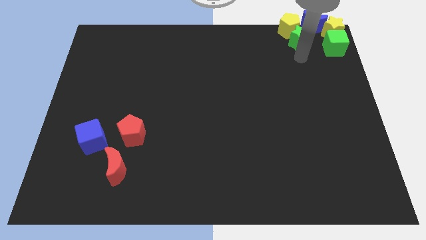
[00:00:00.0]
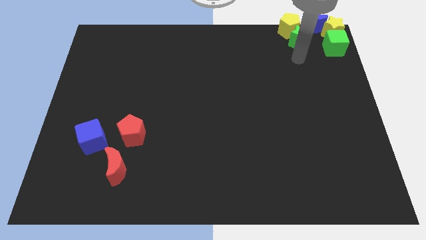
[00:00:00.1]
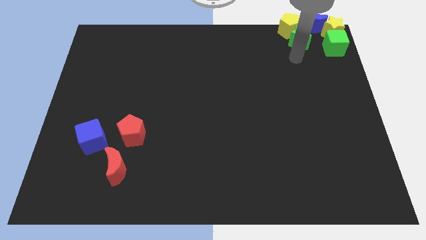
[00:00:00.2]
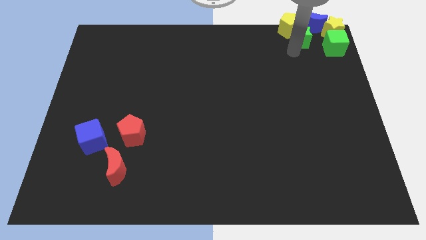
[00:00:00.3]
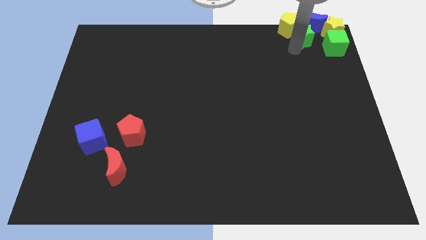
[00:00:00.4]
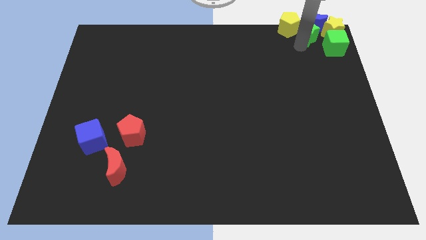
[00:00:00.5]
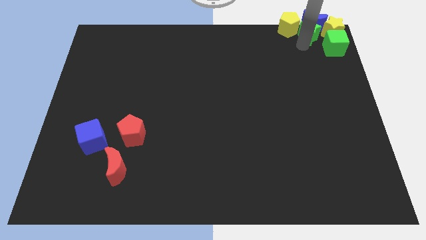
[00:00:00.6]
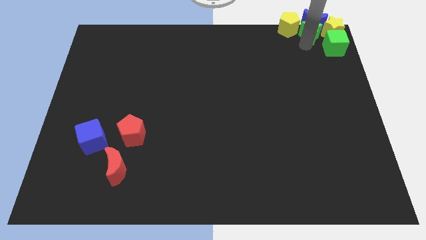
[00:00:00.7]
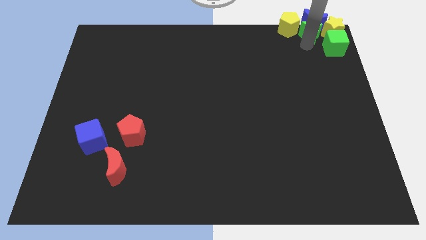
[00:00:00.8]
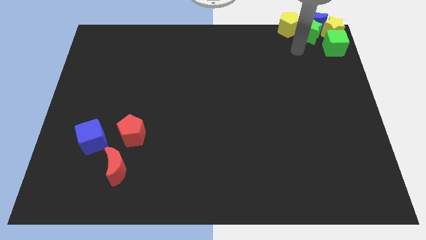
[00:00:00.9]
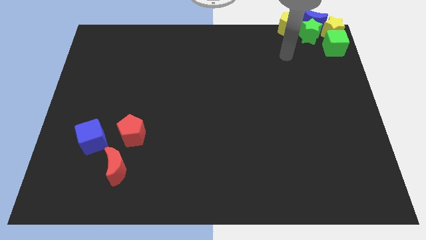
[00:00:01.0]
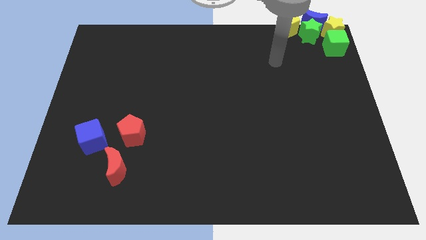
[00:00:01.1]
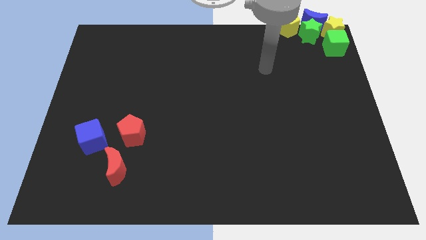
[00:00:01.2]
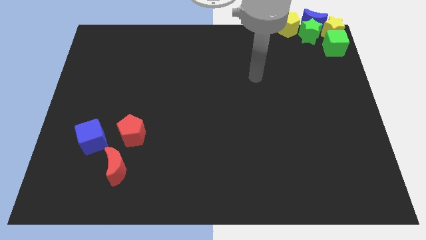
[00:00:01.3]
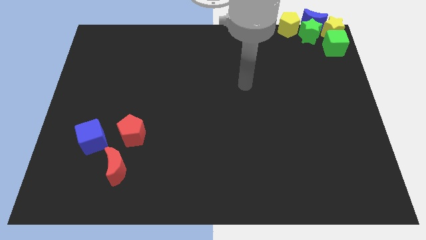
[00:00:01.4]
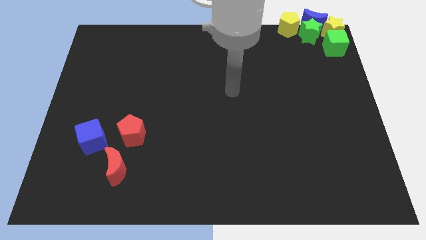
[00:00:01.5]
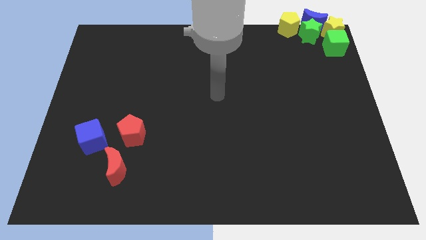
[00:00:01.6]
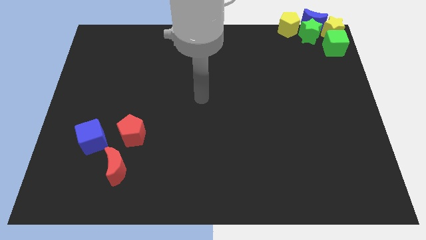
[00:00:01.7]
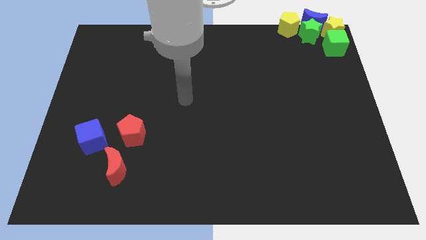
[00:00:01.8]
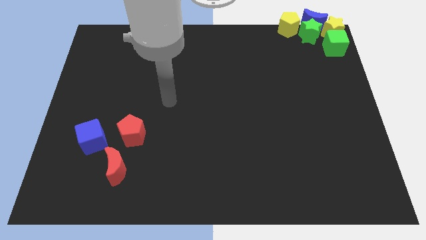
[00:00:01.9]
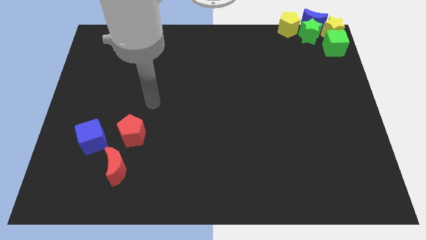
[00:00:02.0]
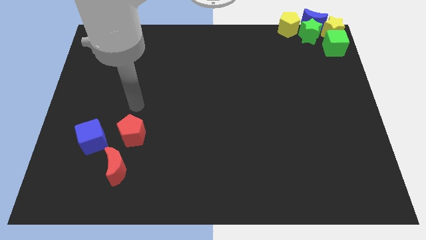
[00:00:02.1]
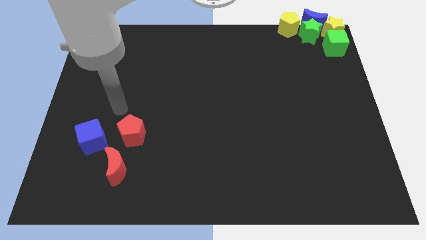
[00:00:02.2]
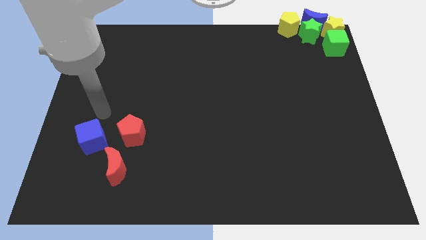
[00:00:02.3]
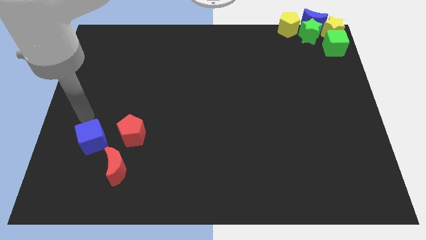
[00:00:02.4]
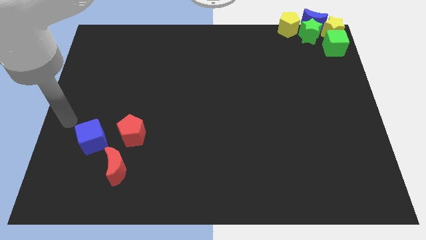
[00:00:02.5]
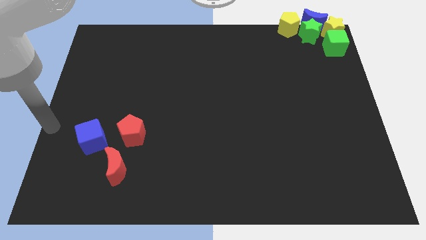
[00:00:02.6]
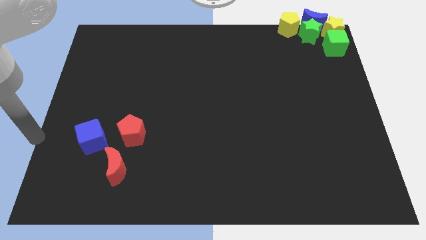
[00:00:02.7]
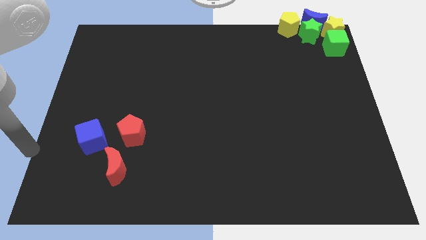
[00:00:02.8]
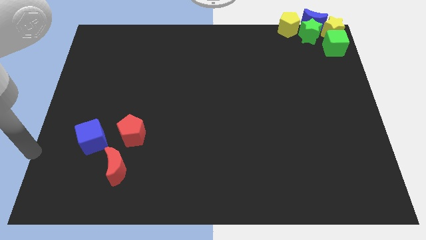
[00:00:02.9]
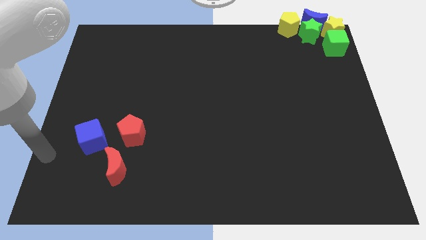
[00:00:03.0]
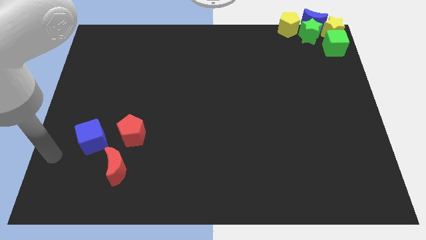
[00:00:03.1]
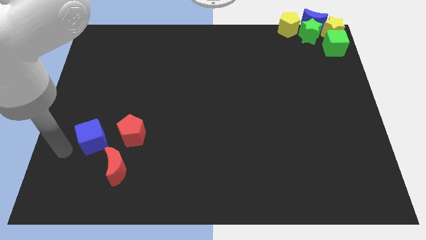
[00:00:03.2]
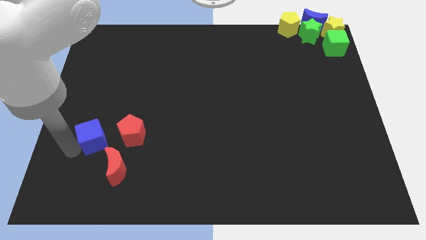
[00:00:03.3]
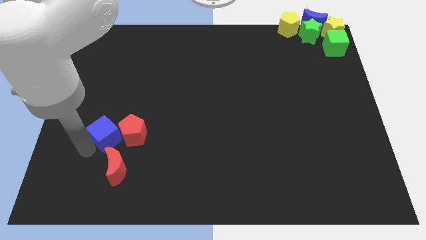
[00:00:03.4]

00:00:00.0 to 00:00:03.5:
move arm left beside the blue cube

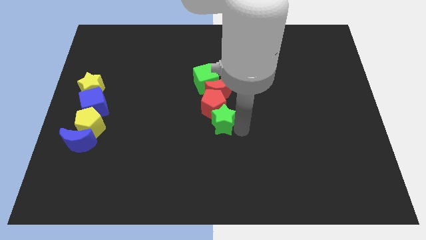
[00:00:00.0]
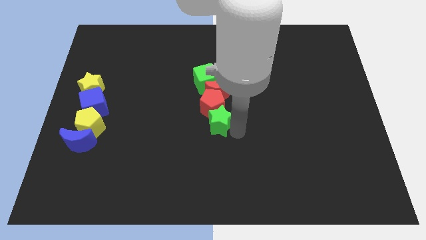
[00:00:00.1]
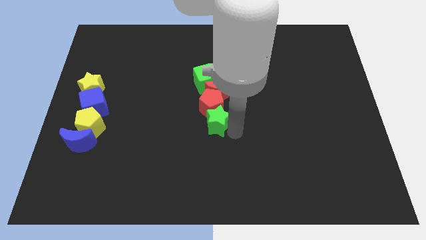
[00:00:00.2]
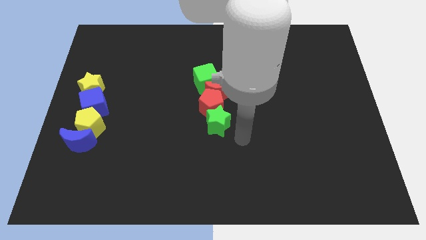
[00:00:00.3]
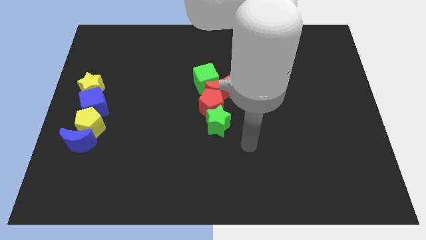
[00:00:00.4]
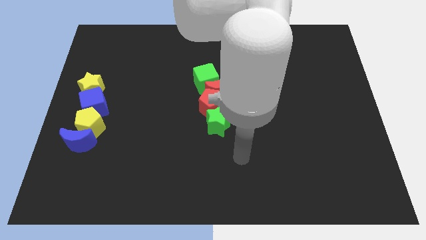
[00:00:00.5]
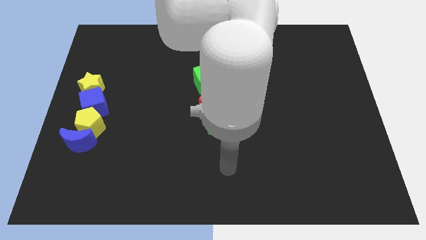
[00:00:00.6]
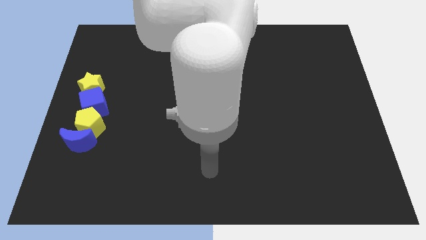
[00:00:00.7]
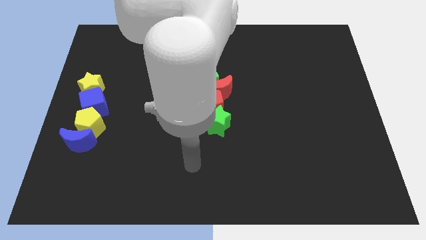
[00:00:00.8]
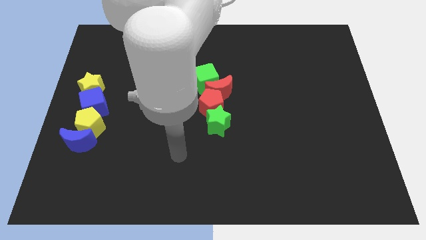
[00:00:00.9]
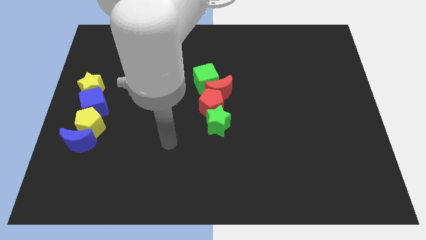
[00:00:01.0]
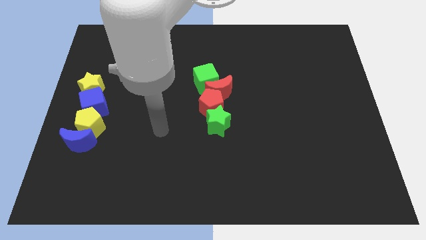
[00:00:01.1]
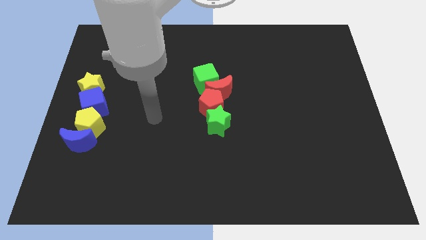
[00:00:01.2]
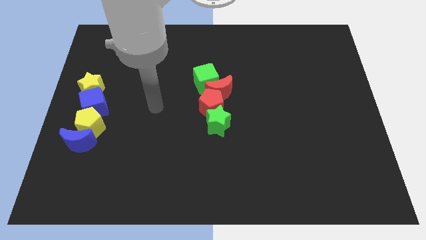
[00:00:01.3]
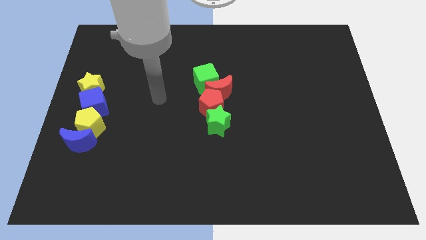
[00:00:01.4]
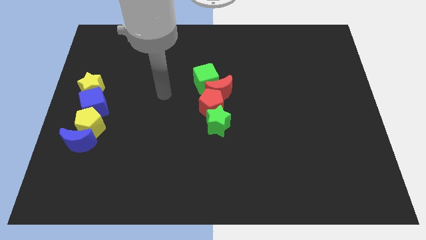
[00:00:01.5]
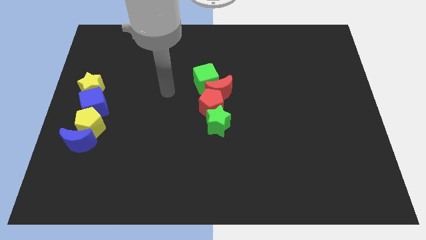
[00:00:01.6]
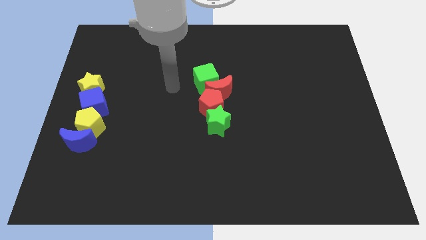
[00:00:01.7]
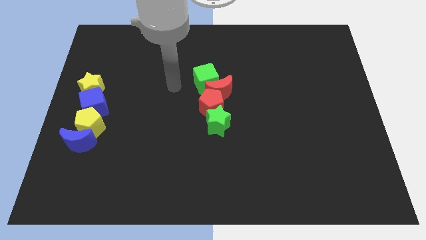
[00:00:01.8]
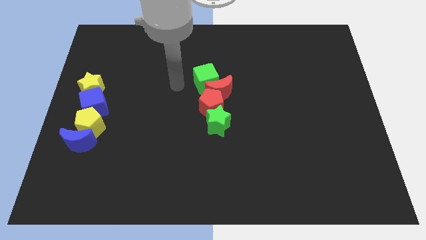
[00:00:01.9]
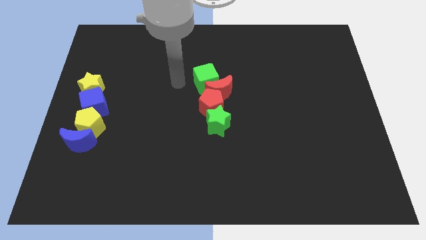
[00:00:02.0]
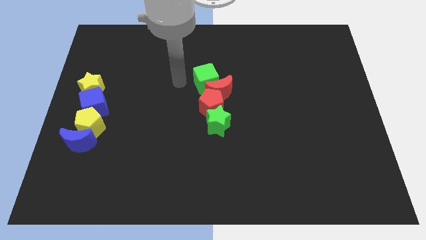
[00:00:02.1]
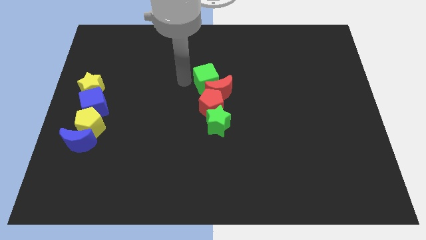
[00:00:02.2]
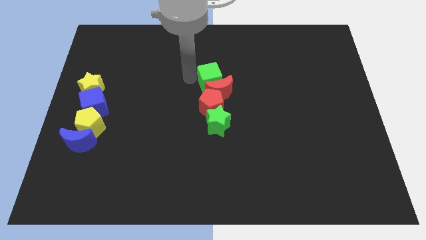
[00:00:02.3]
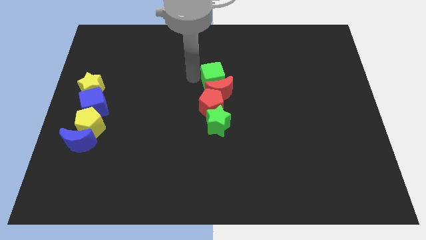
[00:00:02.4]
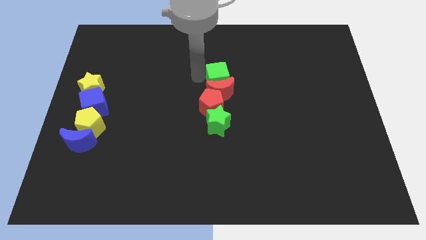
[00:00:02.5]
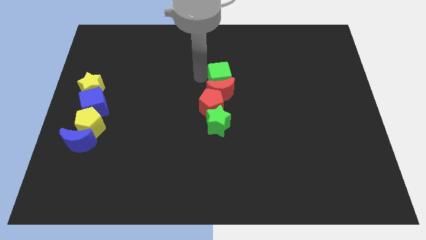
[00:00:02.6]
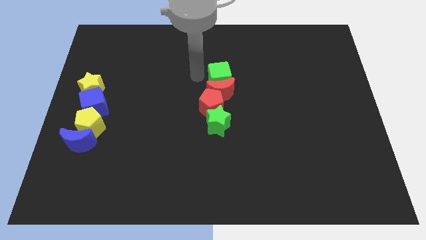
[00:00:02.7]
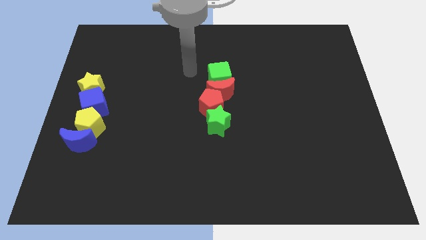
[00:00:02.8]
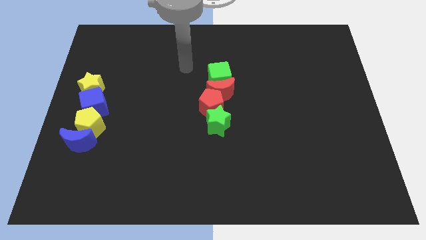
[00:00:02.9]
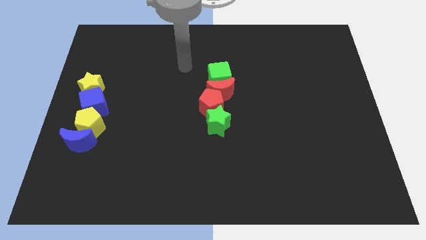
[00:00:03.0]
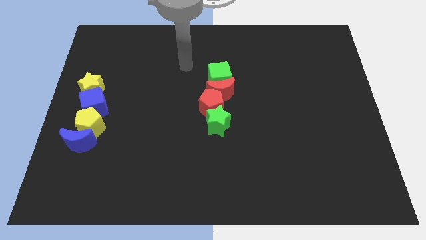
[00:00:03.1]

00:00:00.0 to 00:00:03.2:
move your arm away from the green star

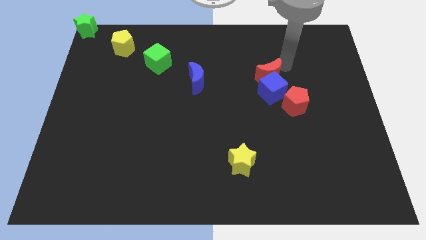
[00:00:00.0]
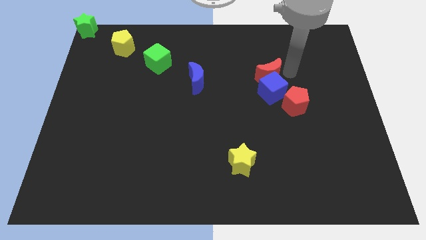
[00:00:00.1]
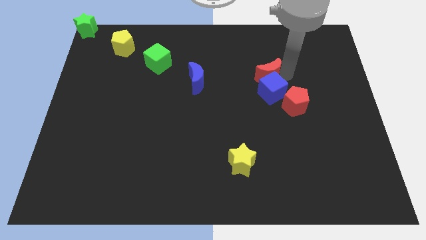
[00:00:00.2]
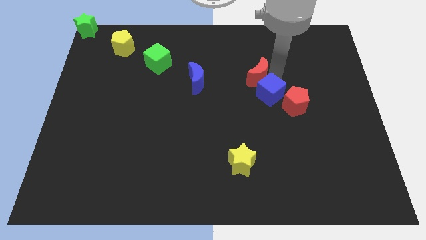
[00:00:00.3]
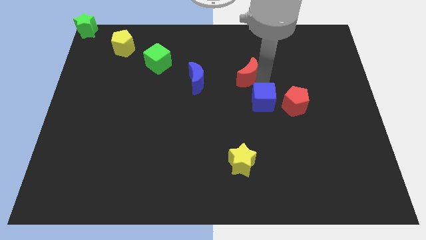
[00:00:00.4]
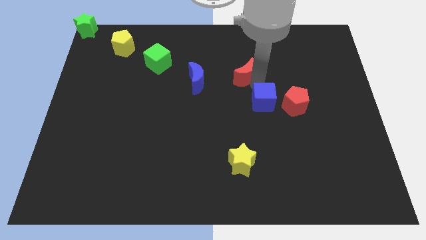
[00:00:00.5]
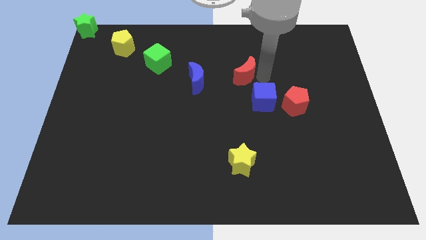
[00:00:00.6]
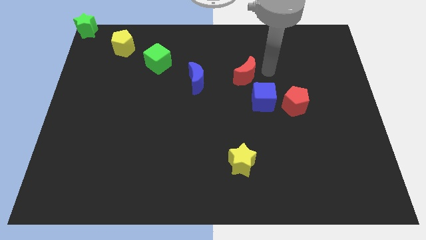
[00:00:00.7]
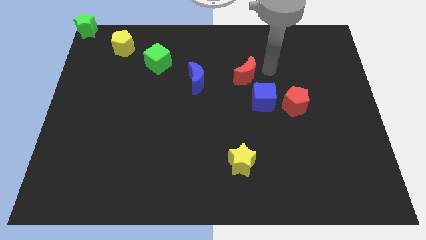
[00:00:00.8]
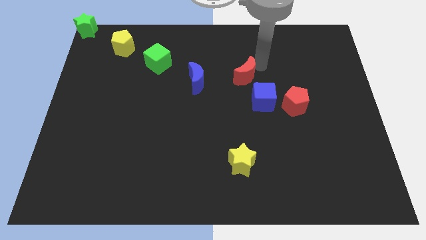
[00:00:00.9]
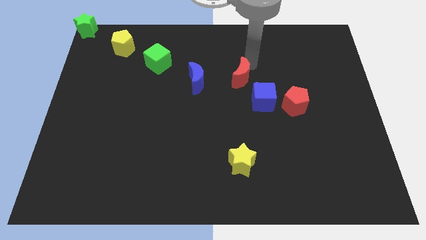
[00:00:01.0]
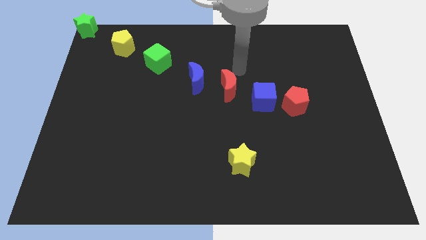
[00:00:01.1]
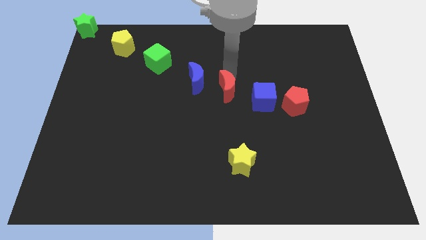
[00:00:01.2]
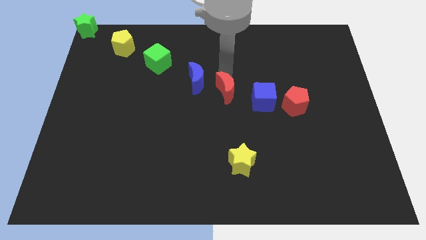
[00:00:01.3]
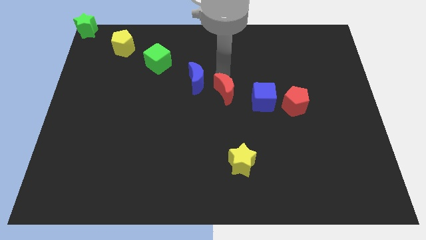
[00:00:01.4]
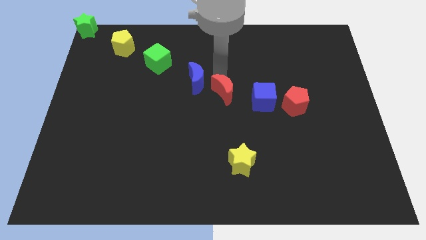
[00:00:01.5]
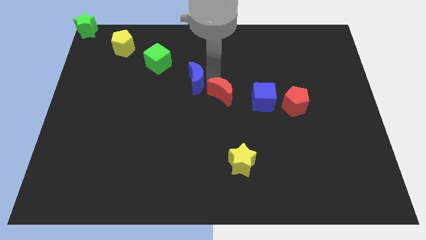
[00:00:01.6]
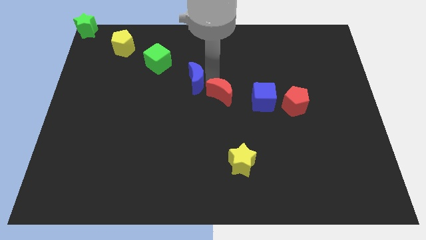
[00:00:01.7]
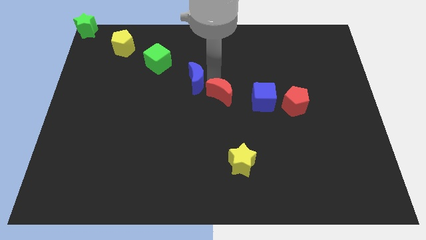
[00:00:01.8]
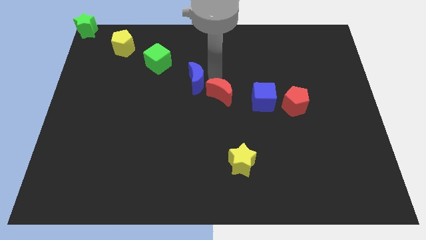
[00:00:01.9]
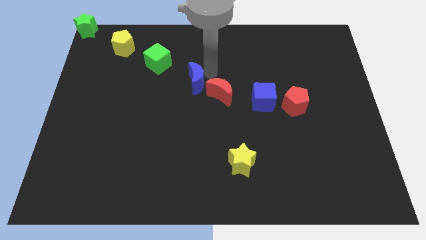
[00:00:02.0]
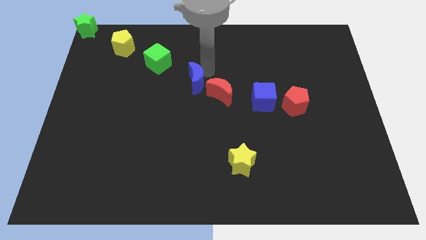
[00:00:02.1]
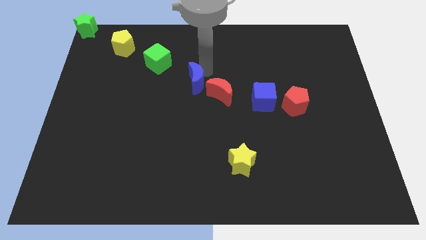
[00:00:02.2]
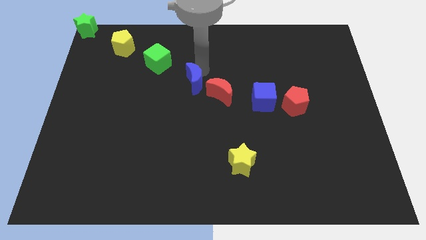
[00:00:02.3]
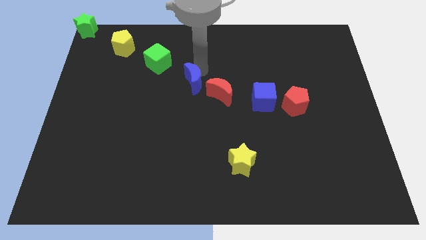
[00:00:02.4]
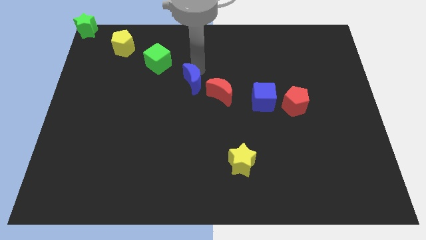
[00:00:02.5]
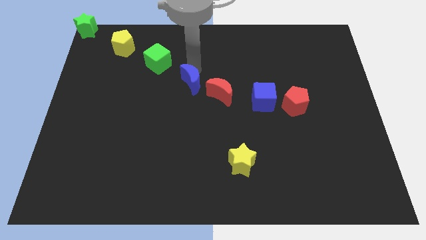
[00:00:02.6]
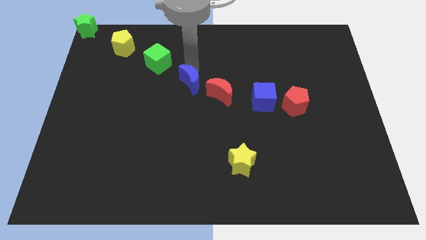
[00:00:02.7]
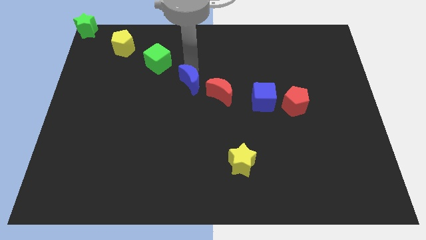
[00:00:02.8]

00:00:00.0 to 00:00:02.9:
separate the red moon from blue cube to form a diagonal line
